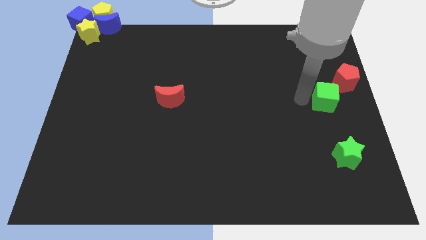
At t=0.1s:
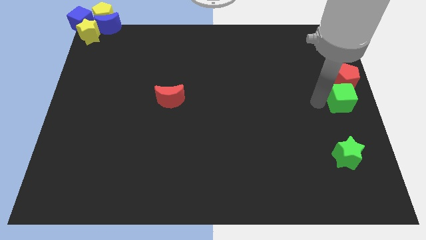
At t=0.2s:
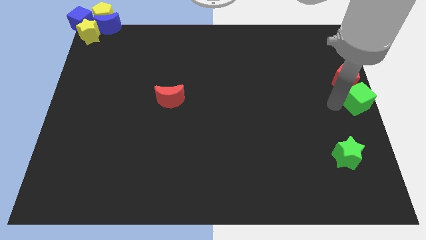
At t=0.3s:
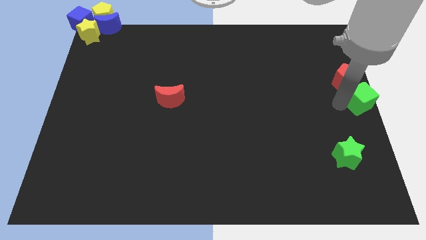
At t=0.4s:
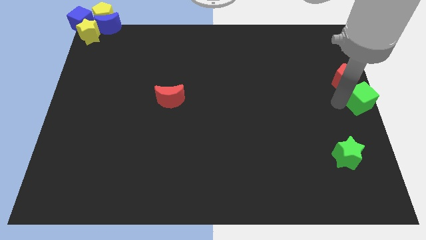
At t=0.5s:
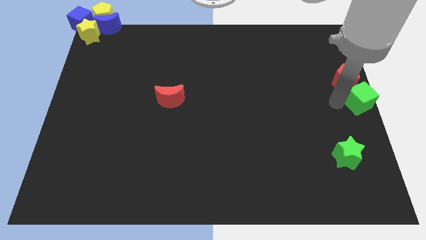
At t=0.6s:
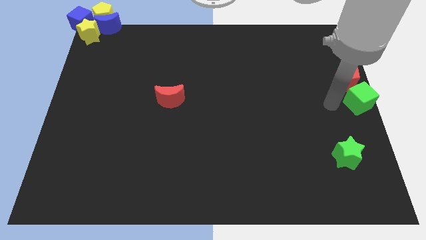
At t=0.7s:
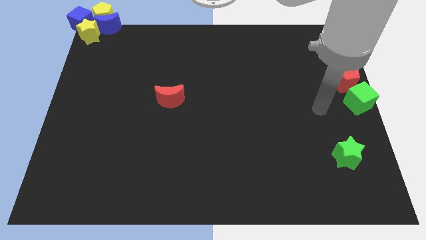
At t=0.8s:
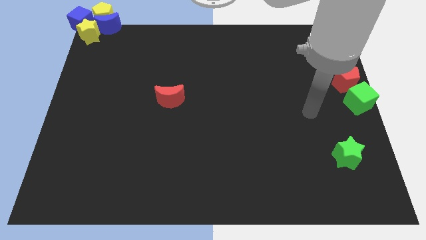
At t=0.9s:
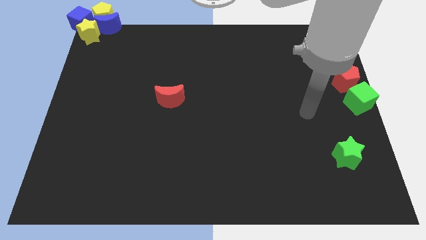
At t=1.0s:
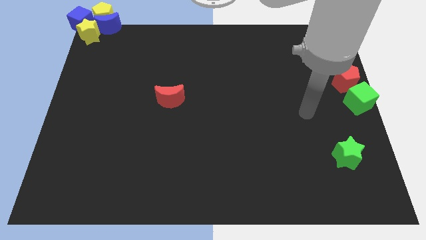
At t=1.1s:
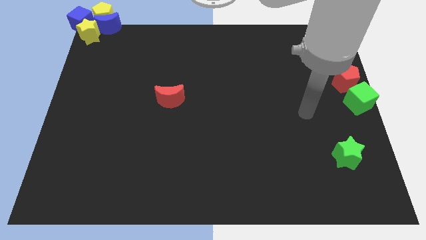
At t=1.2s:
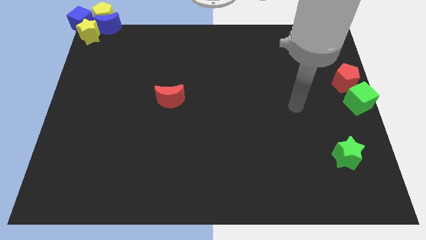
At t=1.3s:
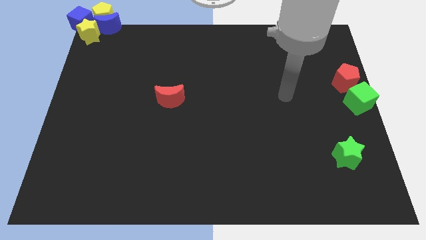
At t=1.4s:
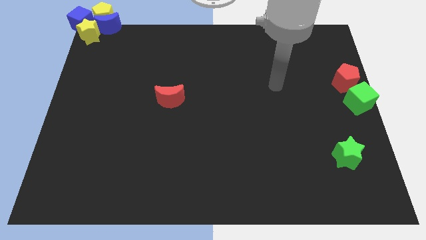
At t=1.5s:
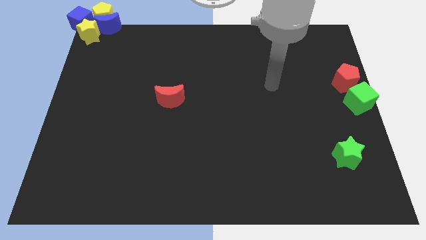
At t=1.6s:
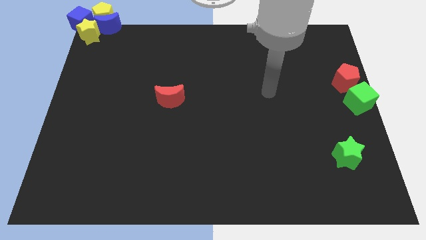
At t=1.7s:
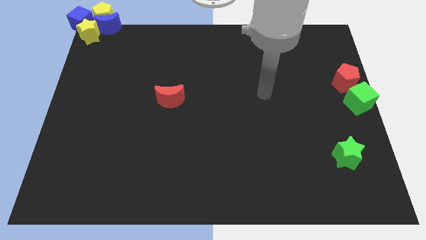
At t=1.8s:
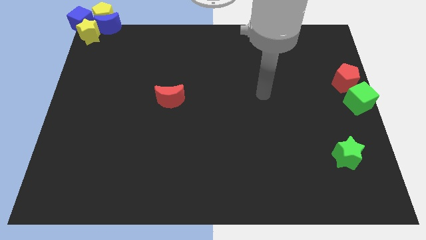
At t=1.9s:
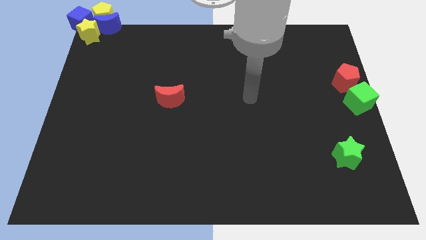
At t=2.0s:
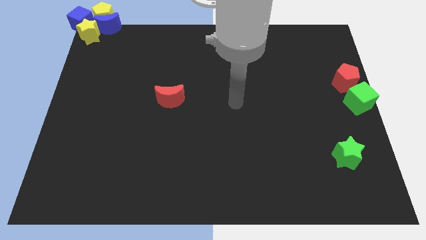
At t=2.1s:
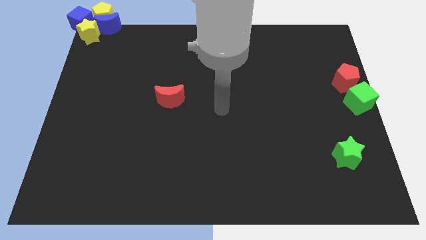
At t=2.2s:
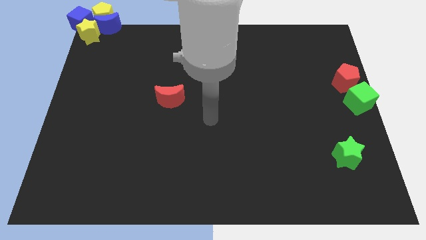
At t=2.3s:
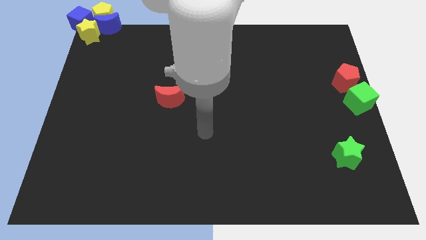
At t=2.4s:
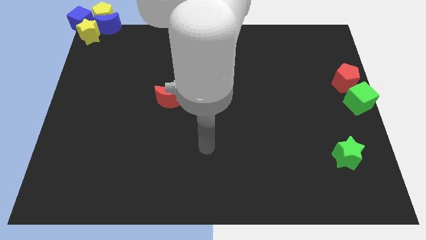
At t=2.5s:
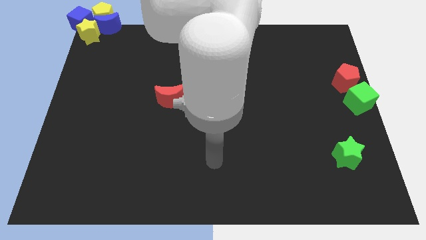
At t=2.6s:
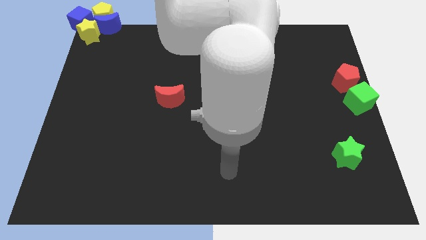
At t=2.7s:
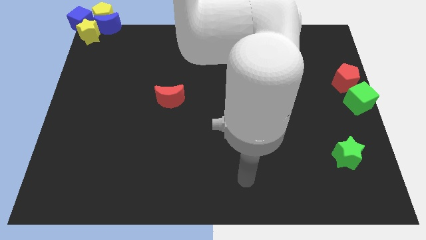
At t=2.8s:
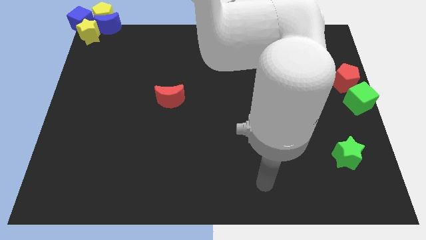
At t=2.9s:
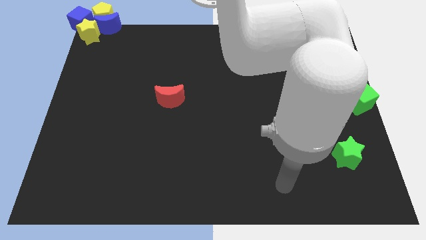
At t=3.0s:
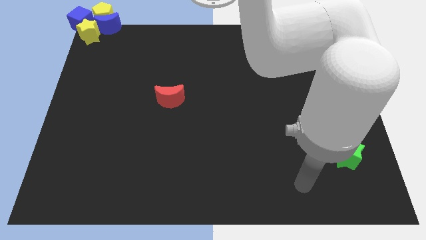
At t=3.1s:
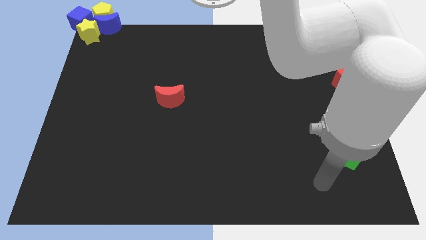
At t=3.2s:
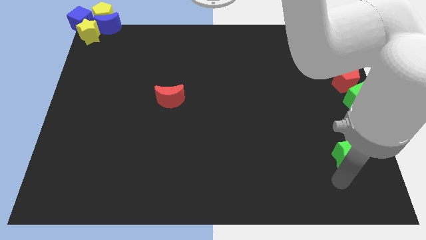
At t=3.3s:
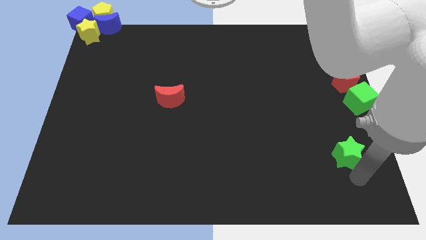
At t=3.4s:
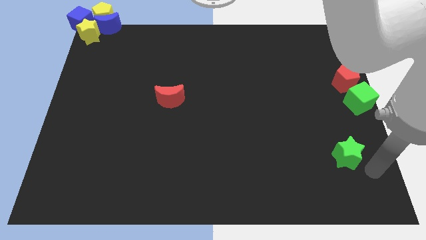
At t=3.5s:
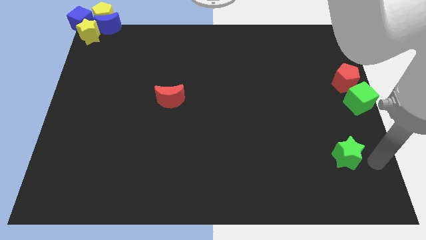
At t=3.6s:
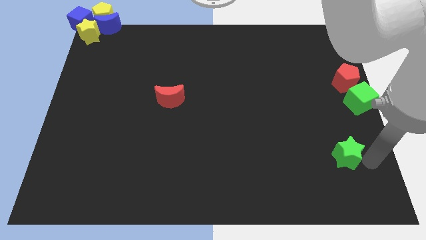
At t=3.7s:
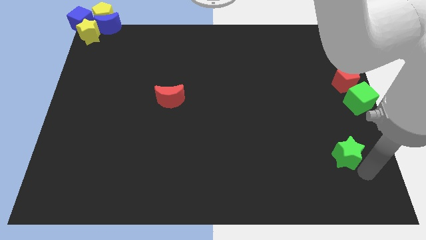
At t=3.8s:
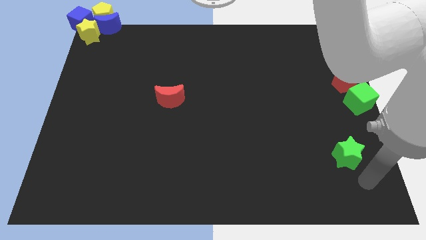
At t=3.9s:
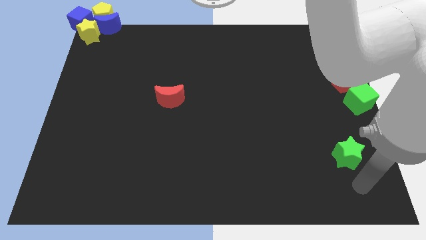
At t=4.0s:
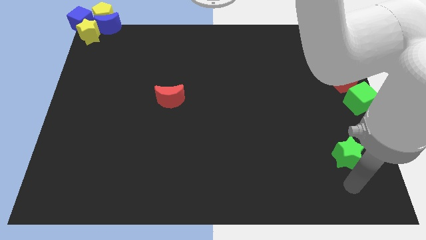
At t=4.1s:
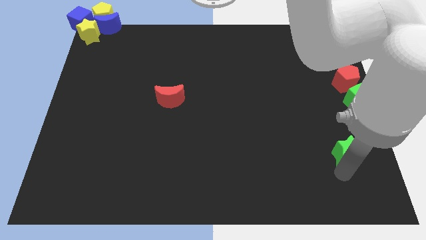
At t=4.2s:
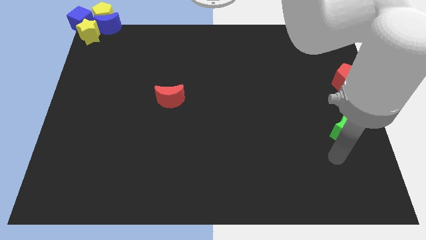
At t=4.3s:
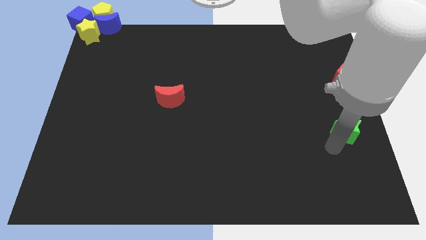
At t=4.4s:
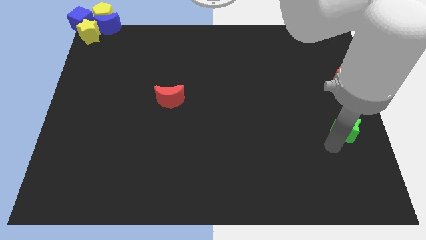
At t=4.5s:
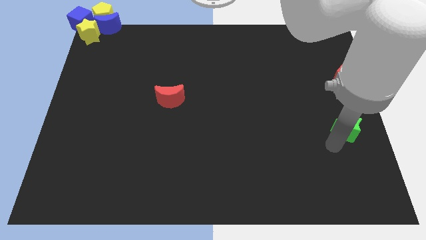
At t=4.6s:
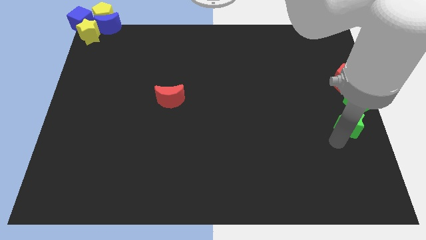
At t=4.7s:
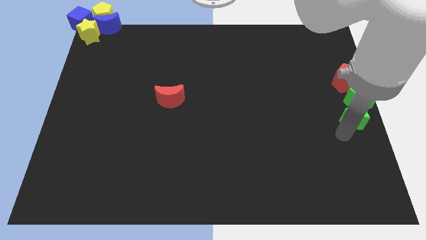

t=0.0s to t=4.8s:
move green star towards the green cube

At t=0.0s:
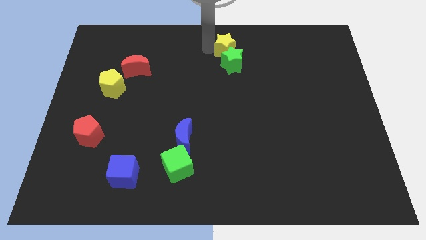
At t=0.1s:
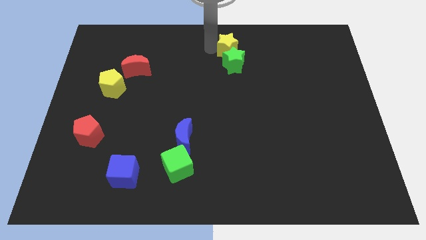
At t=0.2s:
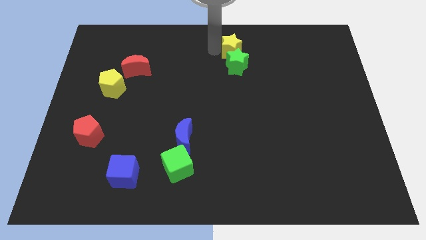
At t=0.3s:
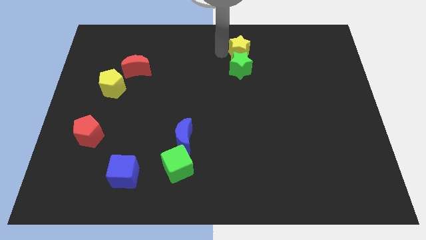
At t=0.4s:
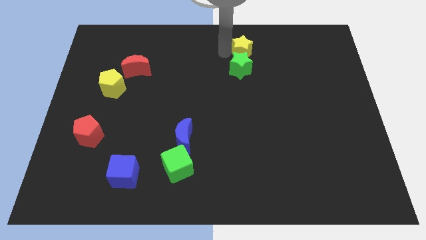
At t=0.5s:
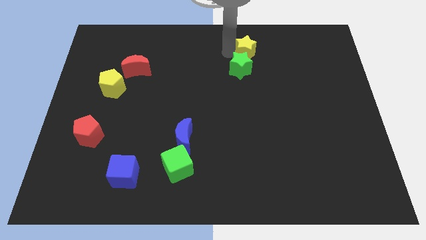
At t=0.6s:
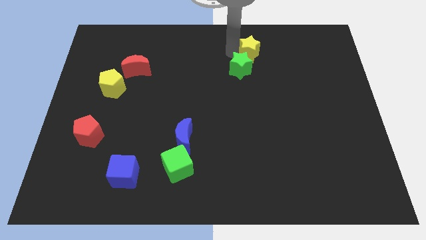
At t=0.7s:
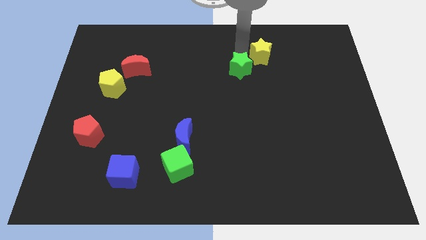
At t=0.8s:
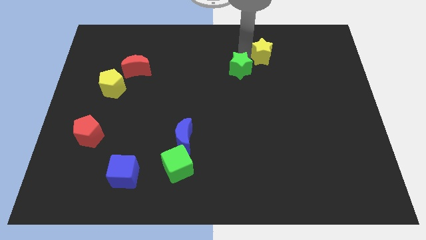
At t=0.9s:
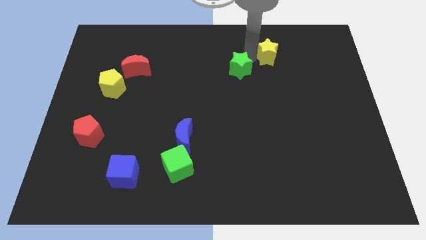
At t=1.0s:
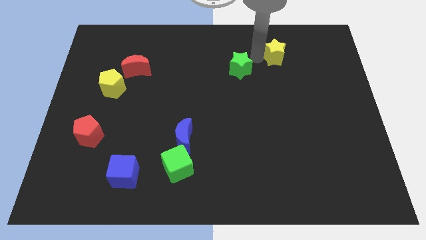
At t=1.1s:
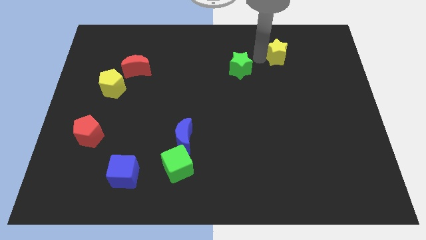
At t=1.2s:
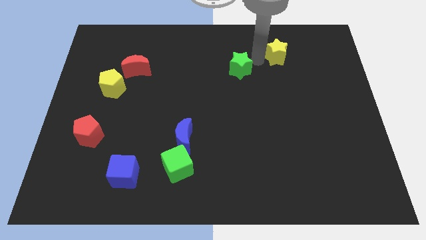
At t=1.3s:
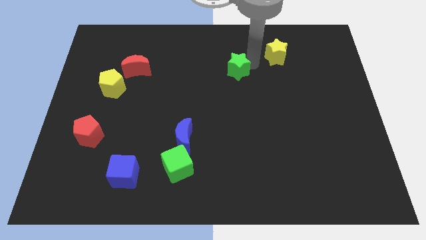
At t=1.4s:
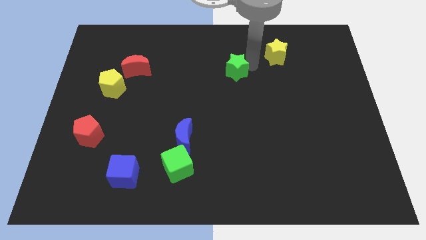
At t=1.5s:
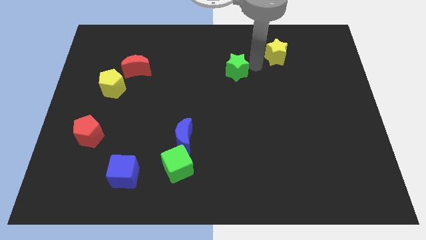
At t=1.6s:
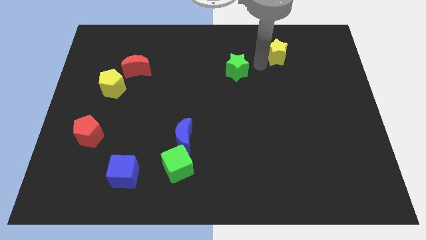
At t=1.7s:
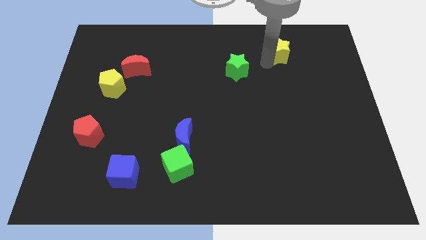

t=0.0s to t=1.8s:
move yellow star slightly right

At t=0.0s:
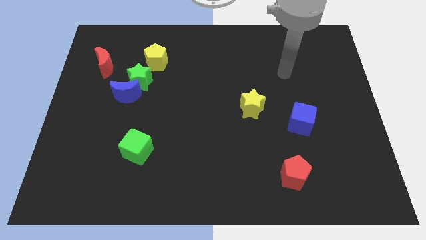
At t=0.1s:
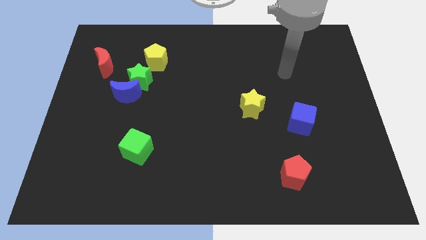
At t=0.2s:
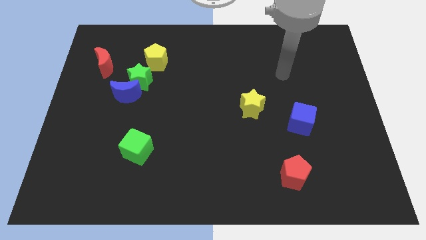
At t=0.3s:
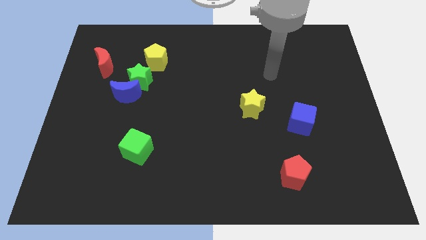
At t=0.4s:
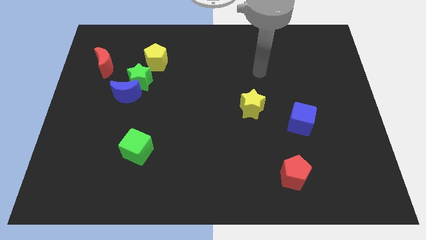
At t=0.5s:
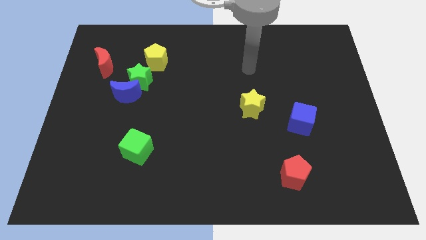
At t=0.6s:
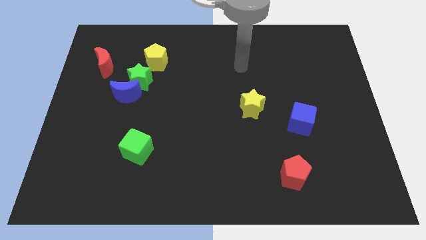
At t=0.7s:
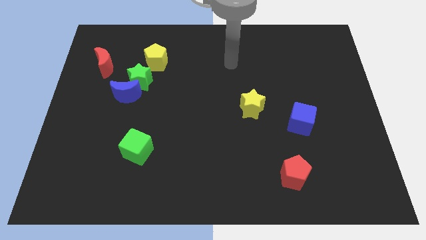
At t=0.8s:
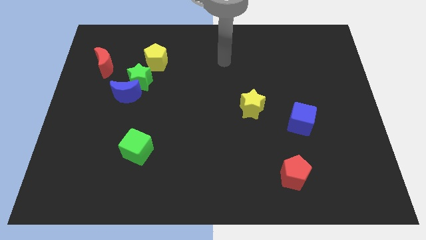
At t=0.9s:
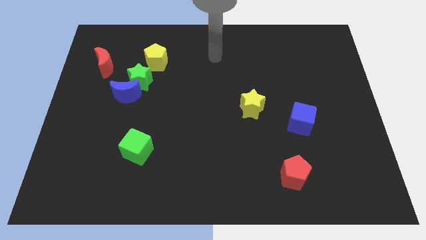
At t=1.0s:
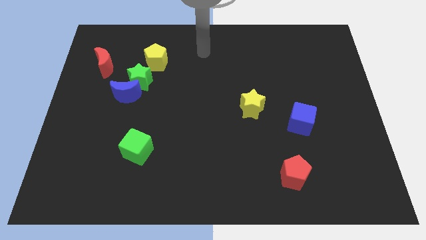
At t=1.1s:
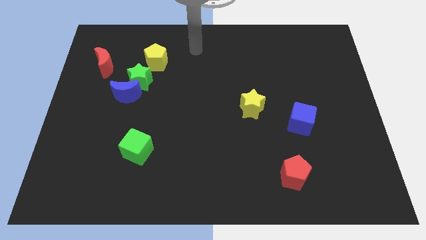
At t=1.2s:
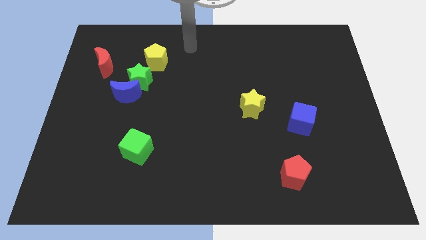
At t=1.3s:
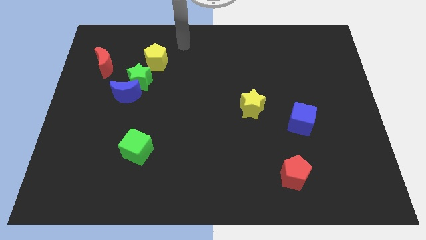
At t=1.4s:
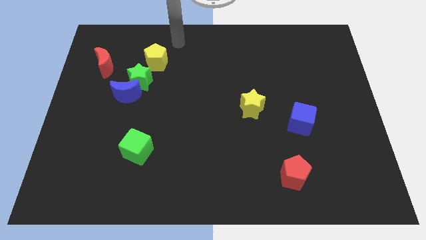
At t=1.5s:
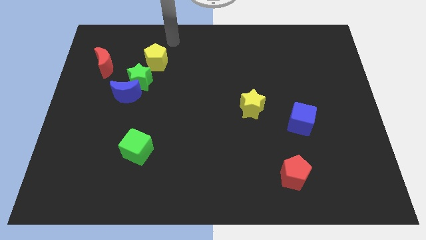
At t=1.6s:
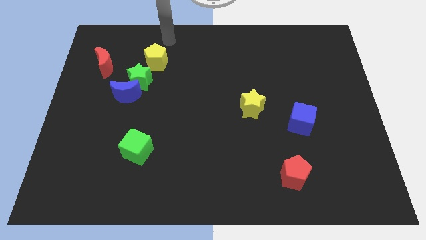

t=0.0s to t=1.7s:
move the arm towards the yellow pentagon

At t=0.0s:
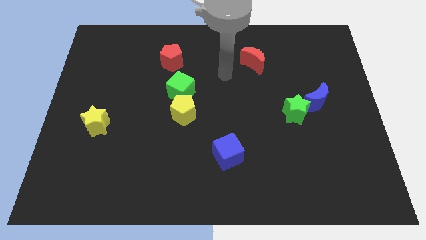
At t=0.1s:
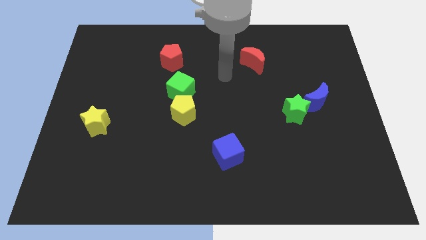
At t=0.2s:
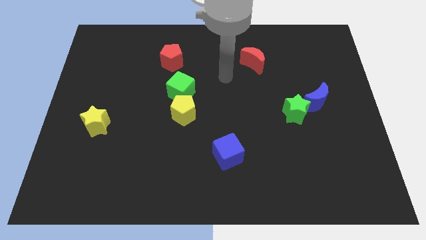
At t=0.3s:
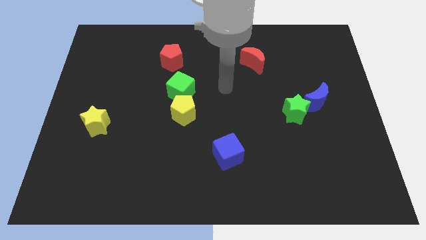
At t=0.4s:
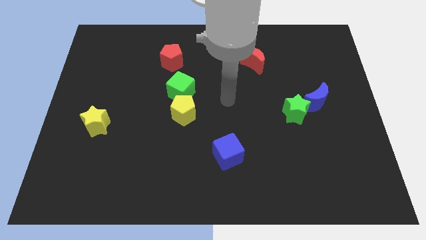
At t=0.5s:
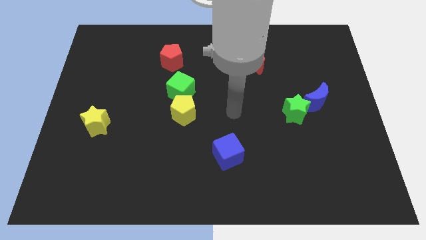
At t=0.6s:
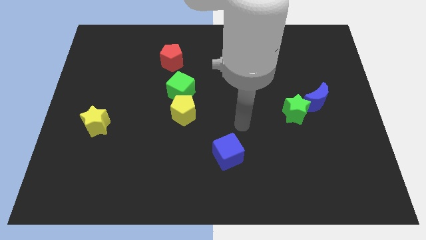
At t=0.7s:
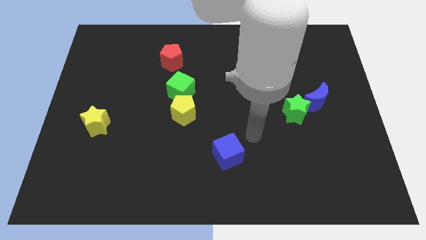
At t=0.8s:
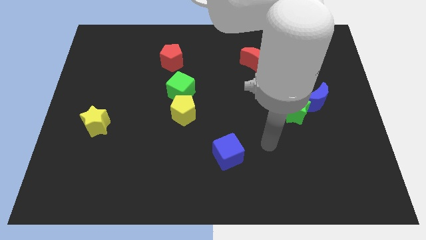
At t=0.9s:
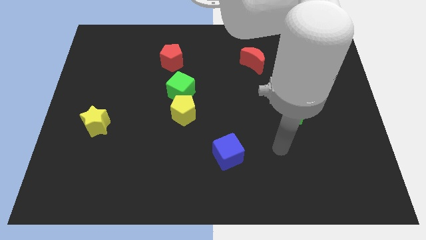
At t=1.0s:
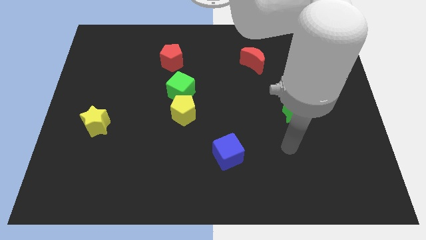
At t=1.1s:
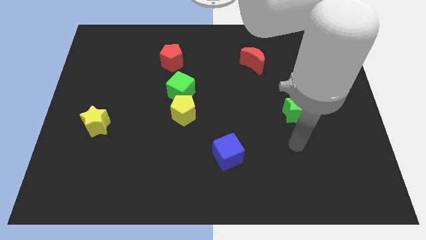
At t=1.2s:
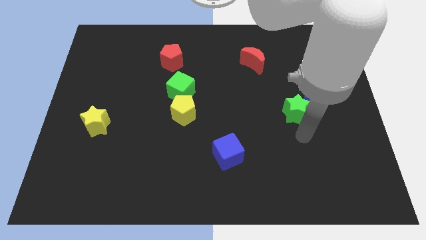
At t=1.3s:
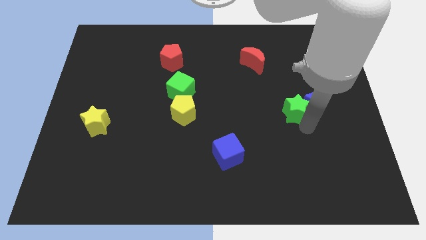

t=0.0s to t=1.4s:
place your arm to the bottom of green star
